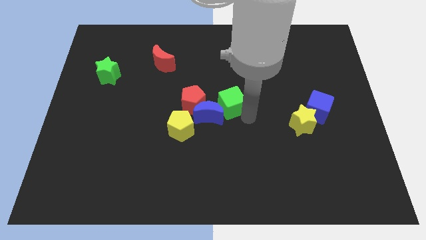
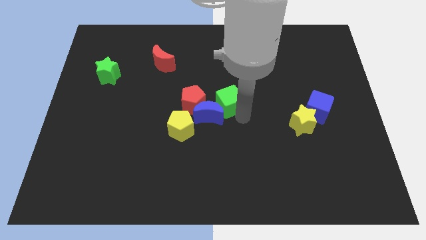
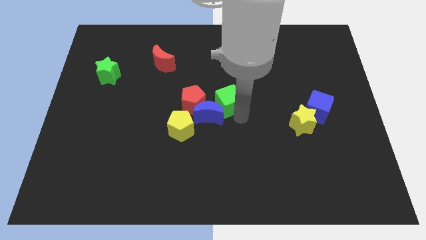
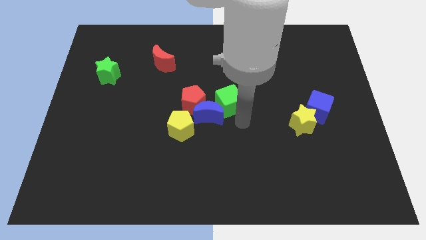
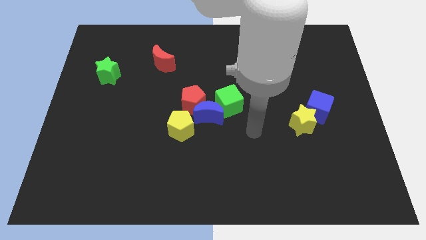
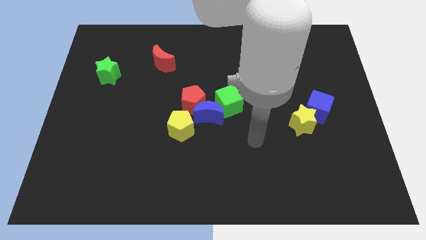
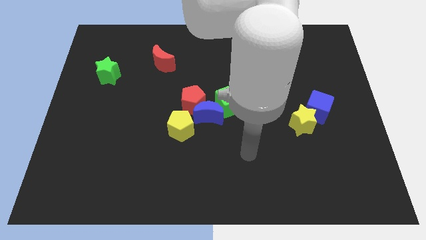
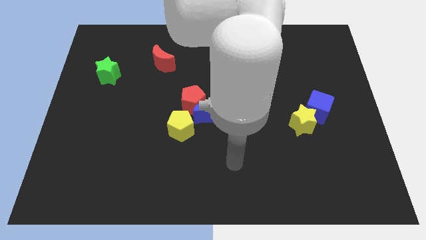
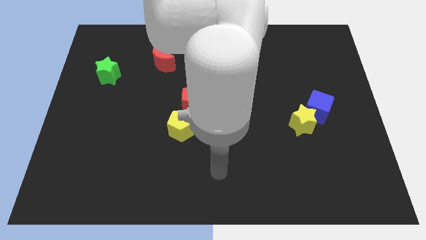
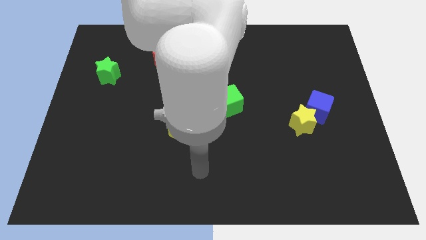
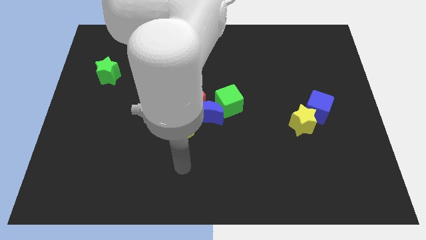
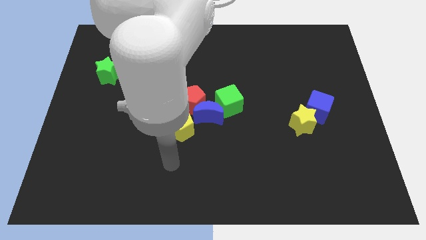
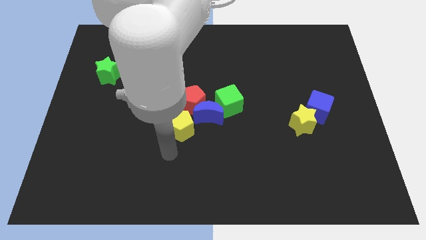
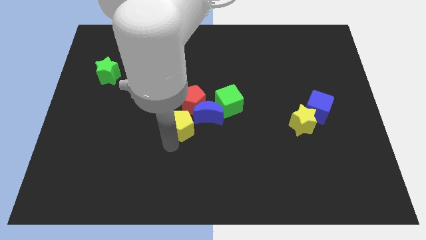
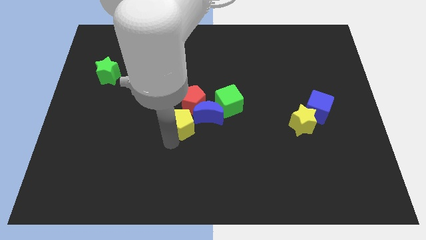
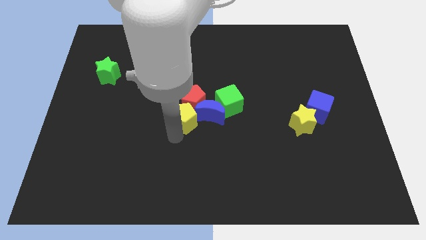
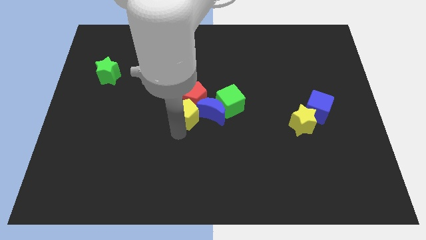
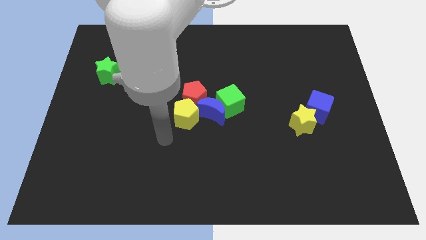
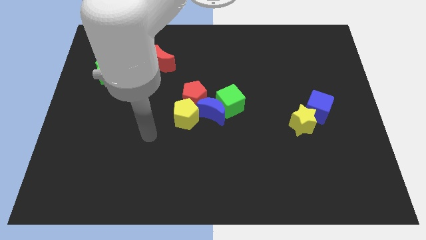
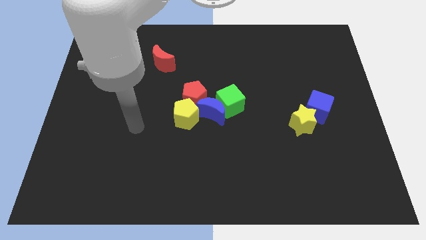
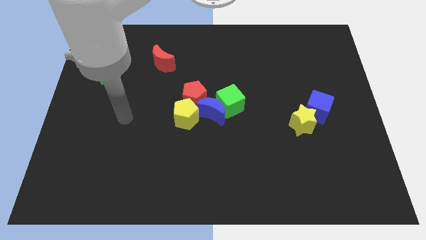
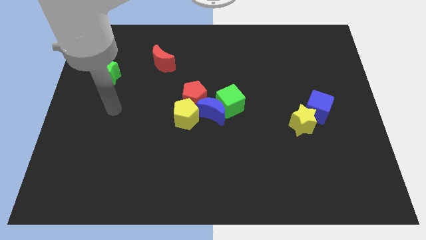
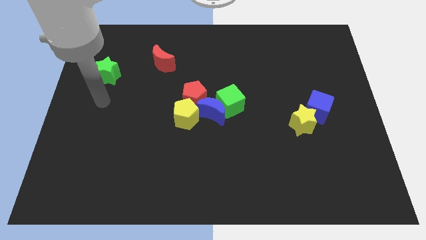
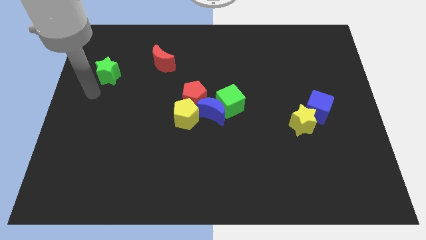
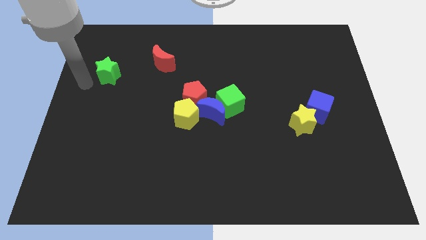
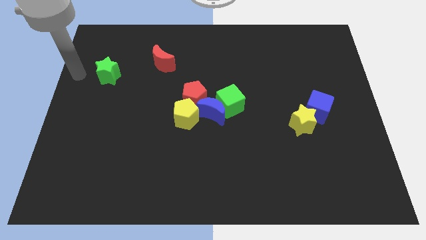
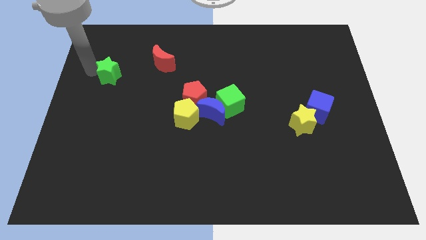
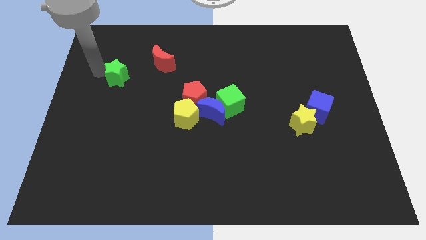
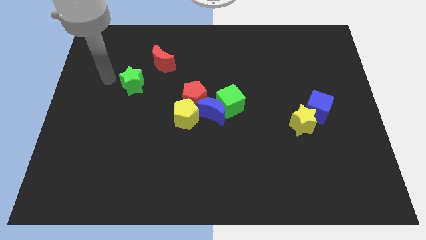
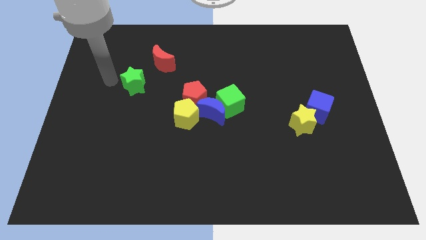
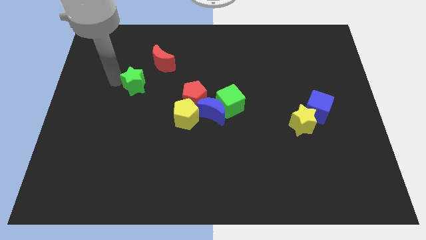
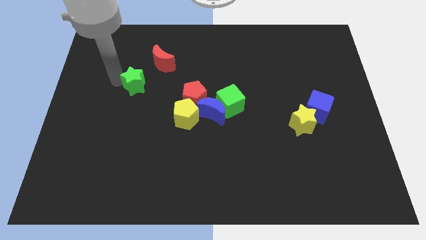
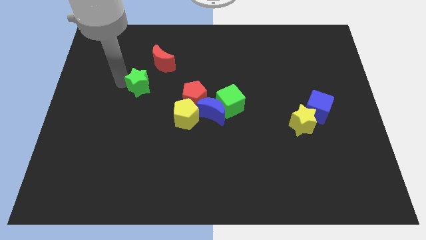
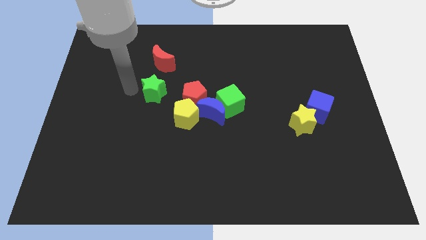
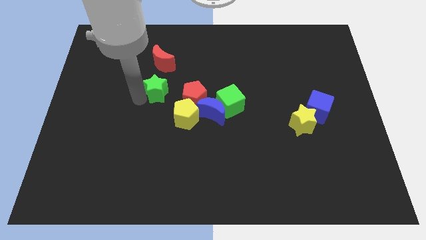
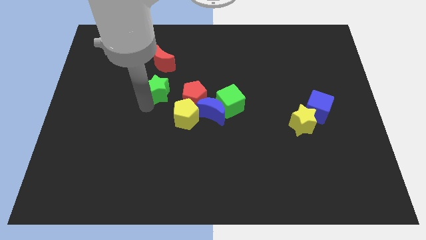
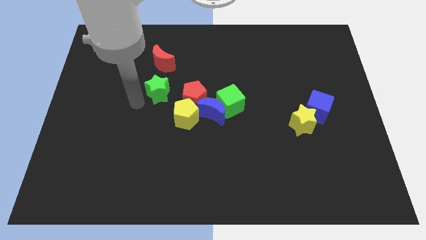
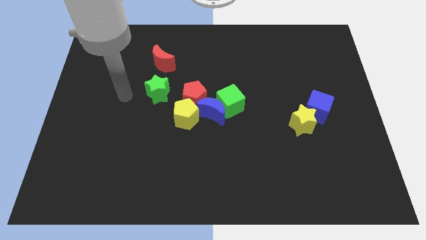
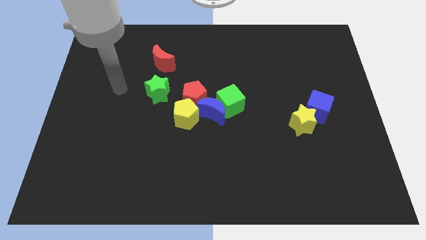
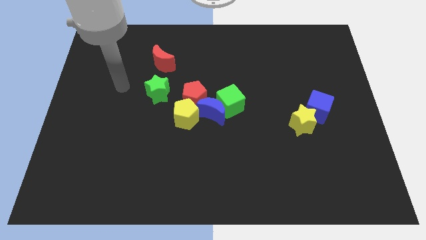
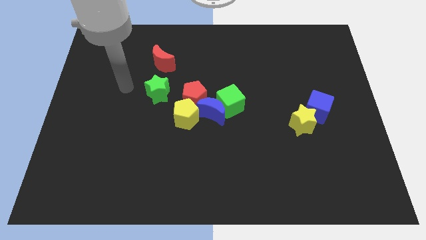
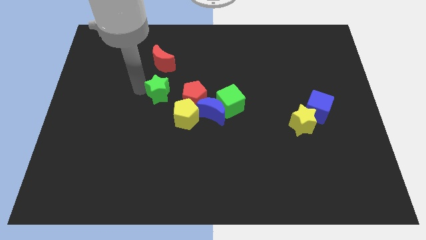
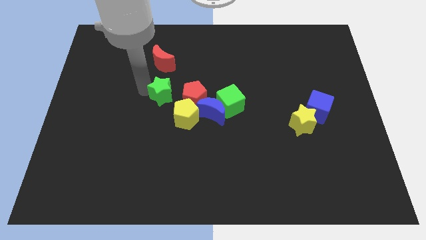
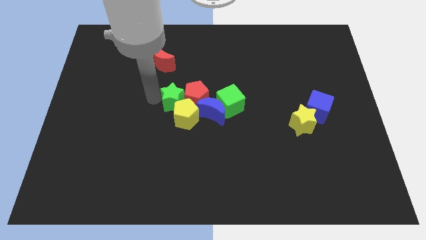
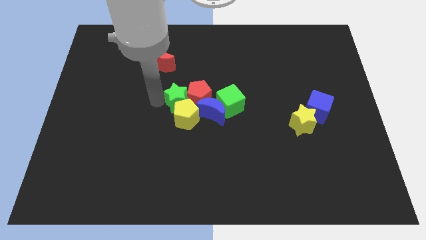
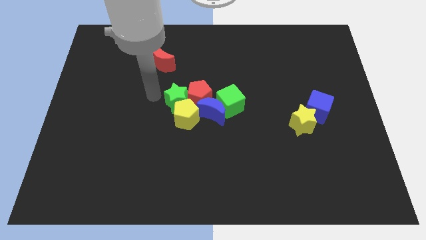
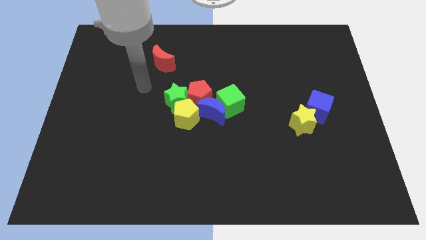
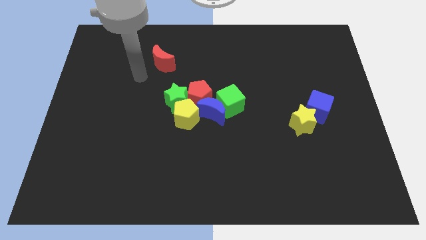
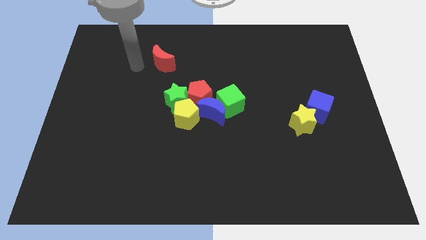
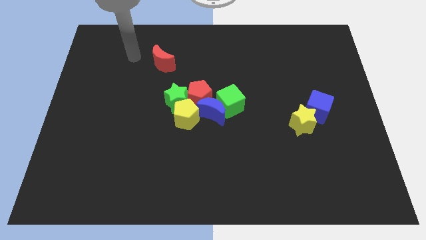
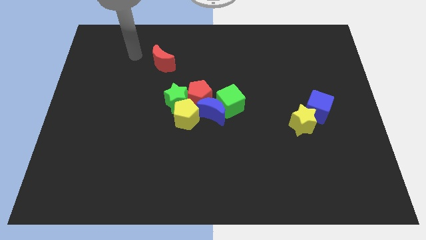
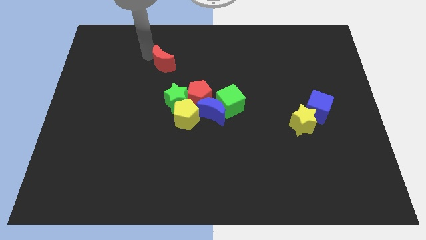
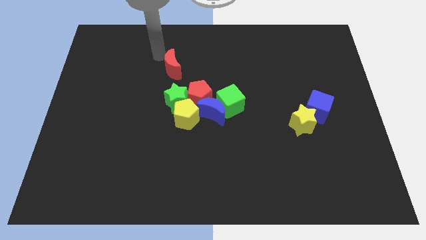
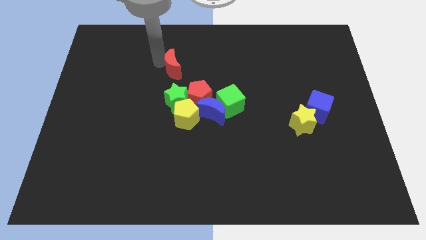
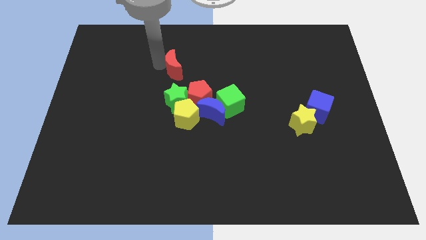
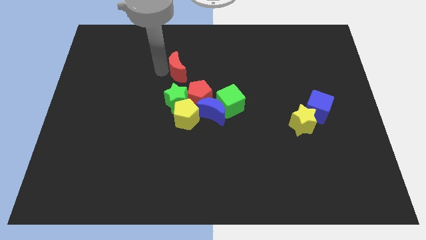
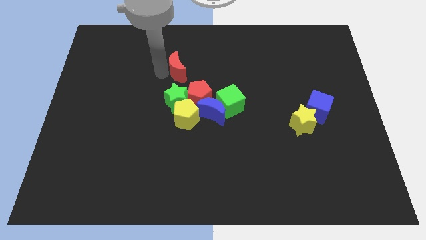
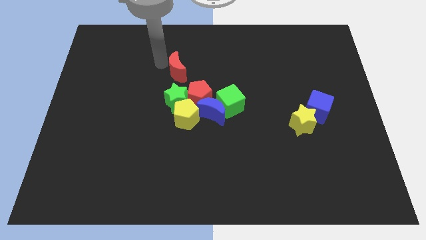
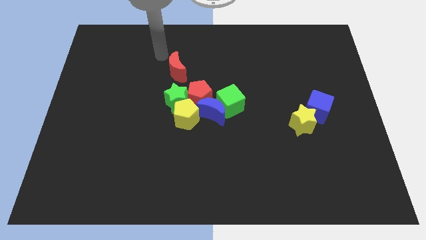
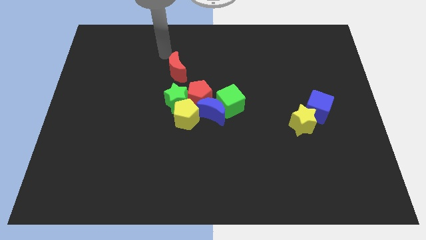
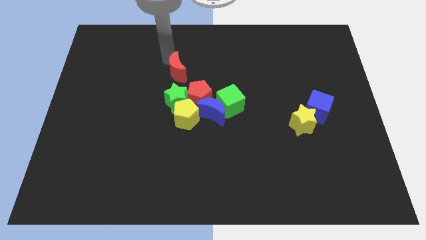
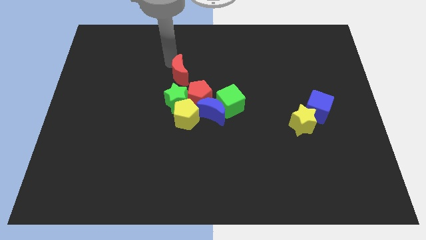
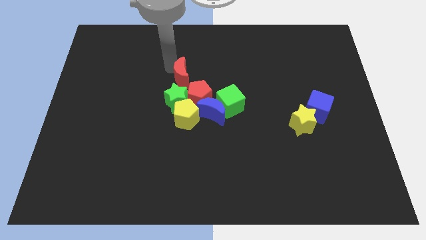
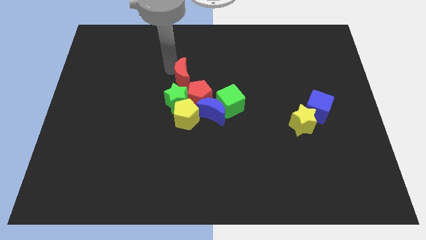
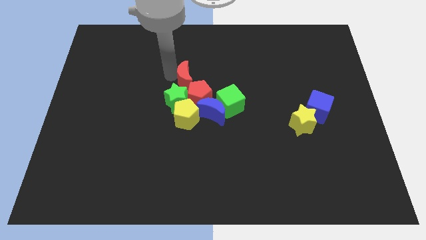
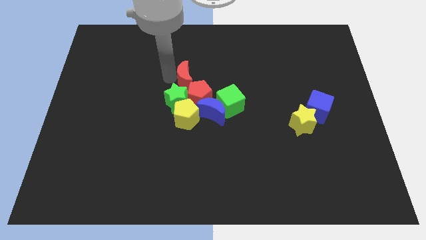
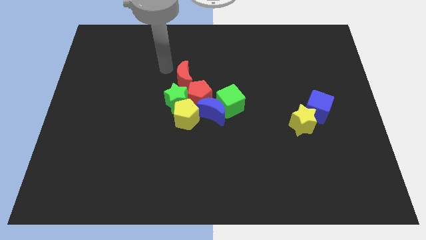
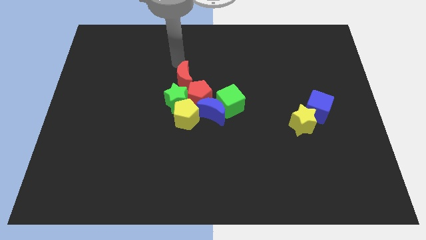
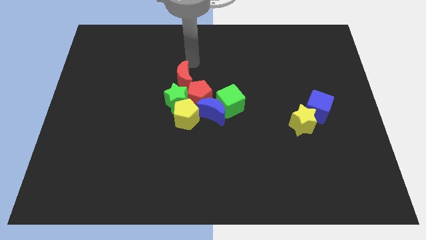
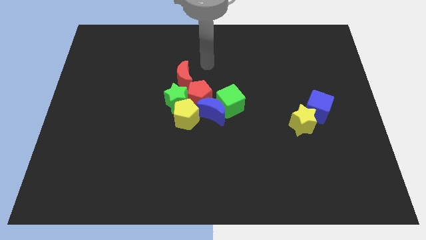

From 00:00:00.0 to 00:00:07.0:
place all the blocks at the center of the board except the yellow star and blue cube

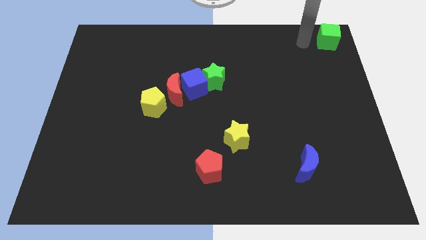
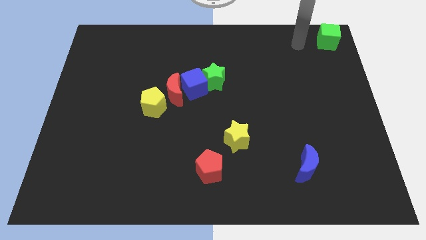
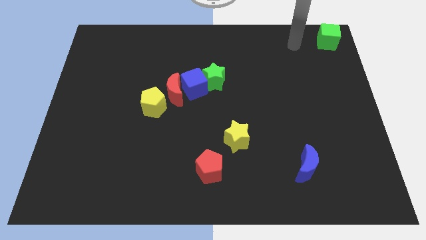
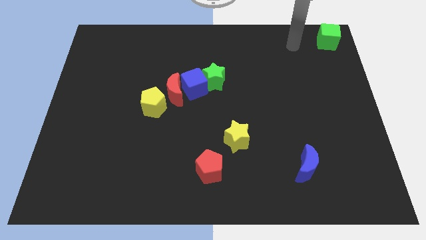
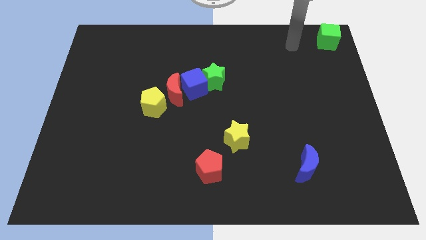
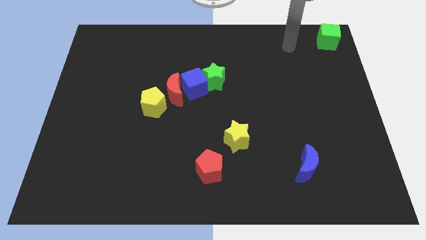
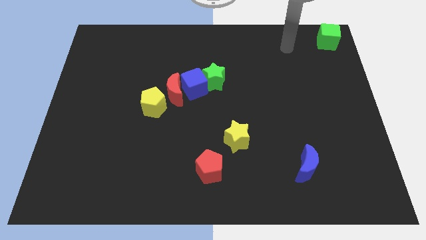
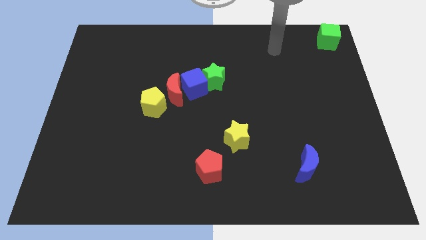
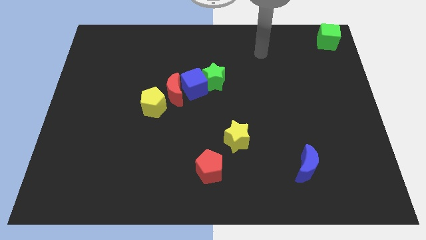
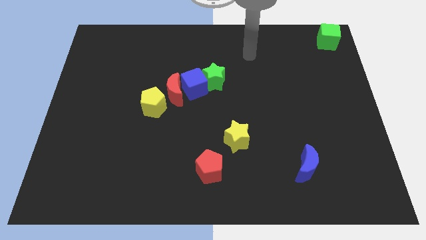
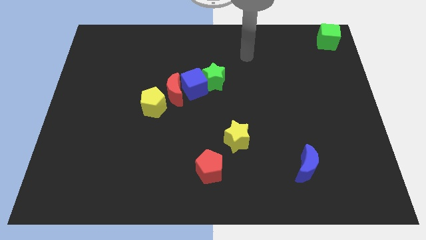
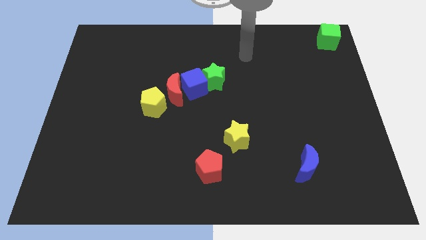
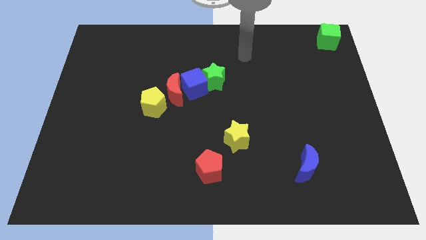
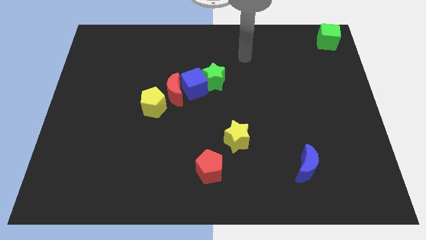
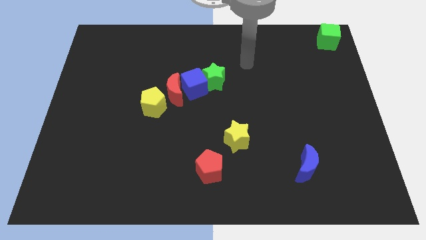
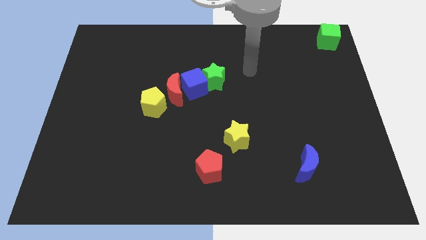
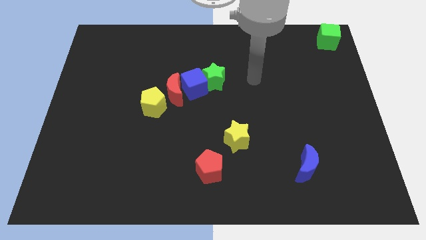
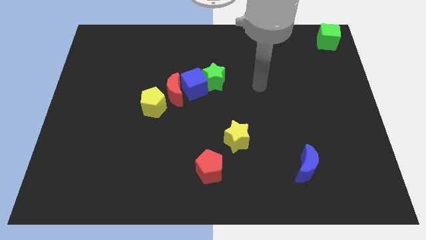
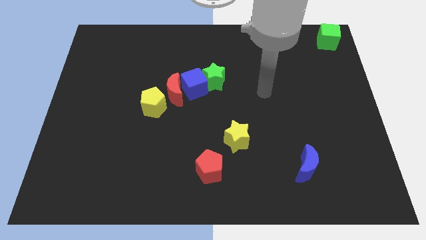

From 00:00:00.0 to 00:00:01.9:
move the arm away from the green cube
